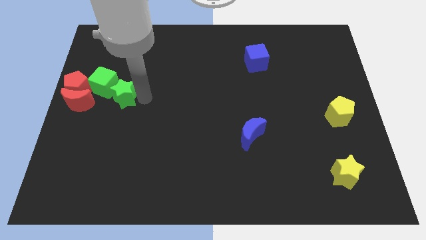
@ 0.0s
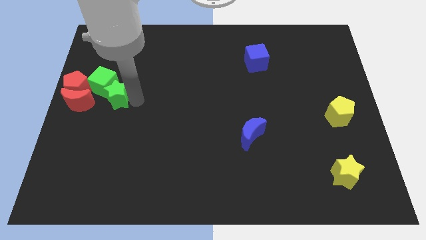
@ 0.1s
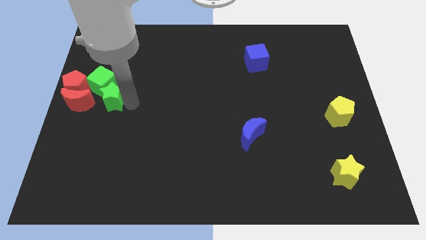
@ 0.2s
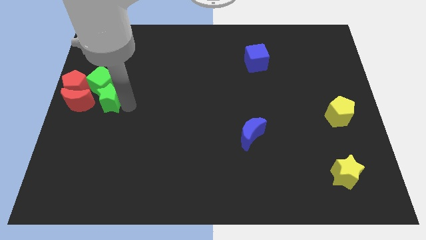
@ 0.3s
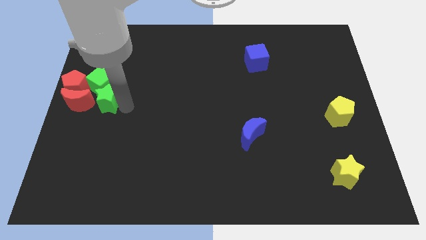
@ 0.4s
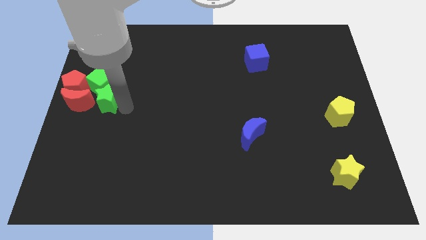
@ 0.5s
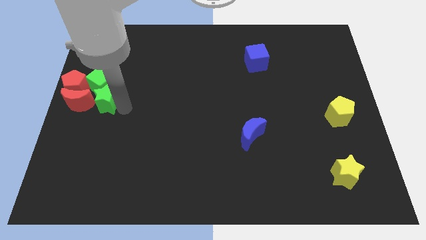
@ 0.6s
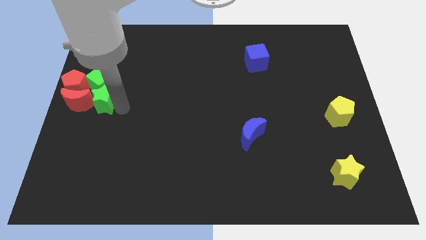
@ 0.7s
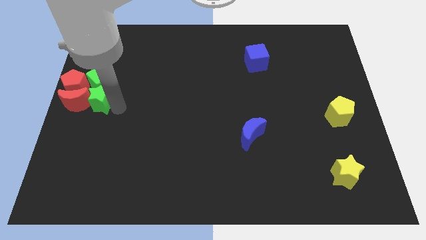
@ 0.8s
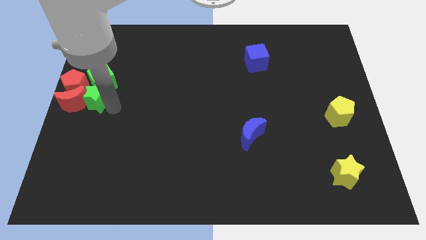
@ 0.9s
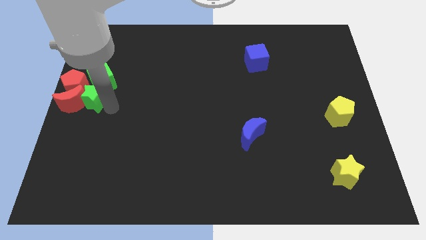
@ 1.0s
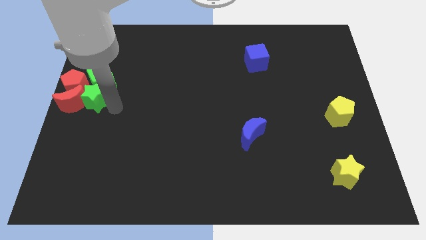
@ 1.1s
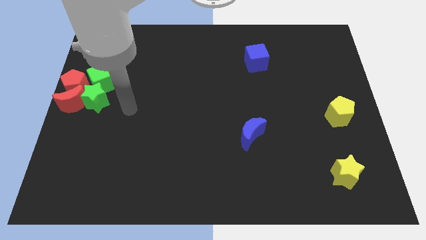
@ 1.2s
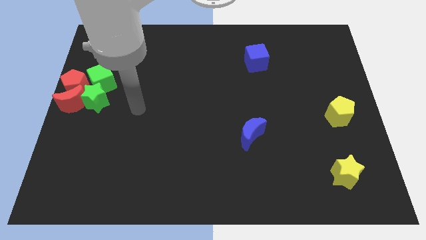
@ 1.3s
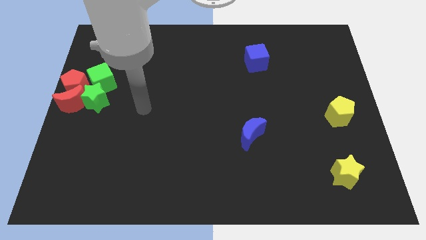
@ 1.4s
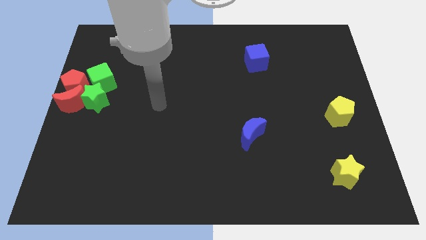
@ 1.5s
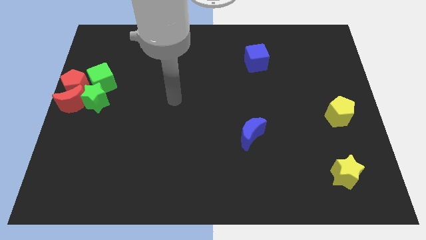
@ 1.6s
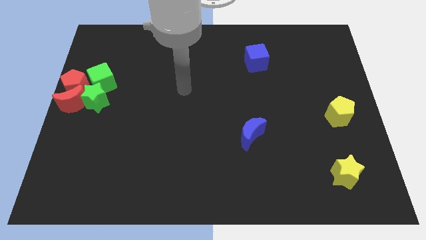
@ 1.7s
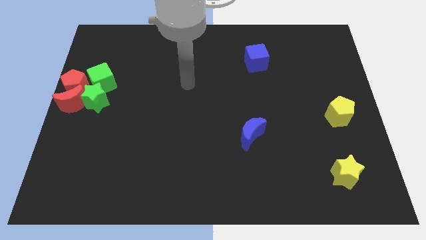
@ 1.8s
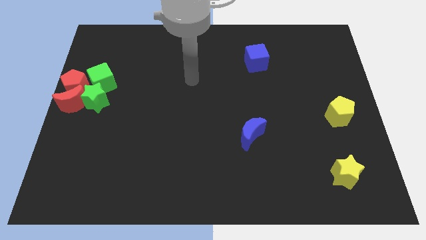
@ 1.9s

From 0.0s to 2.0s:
move the green star into the group of object

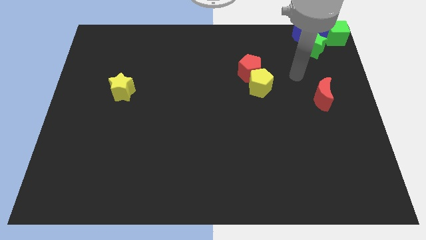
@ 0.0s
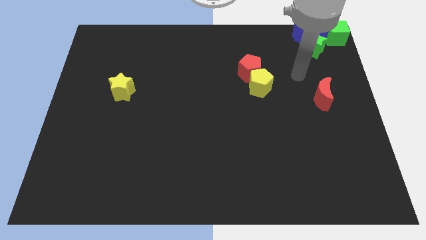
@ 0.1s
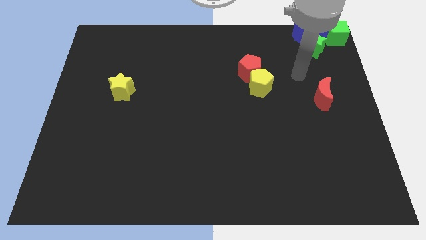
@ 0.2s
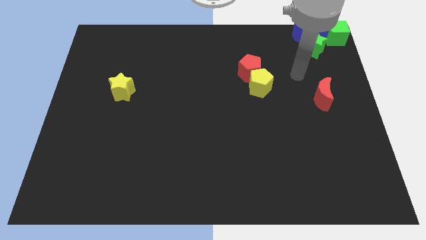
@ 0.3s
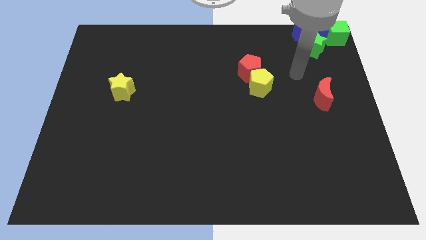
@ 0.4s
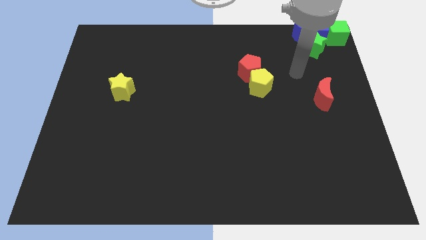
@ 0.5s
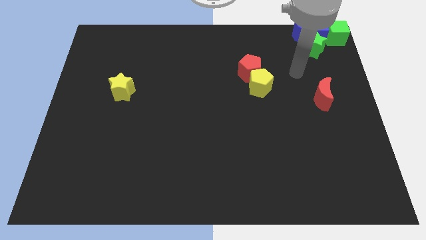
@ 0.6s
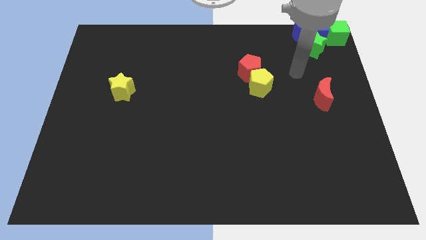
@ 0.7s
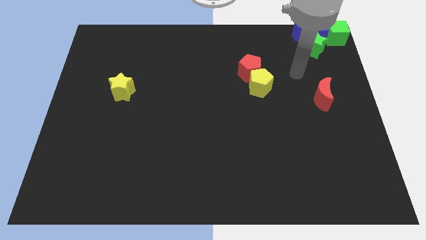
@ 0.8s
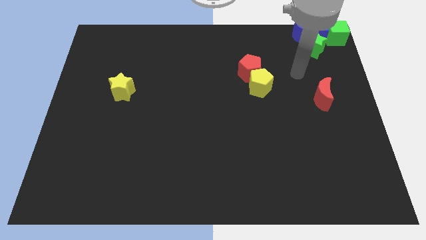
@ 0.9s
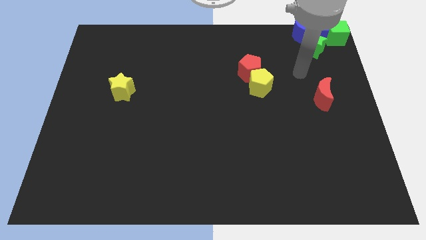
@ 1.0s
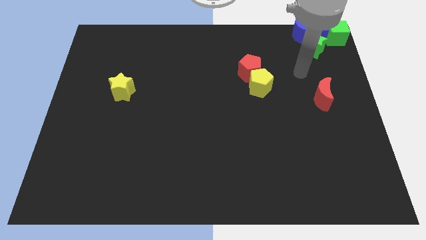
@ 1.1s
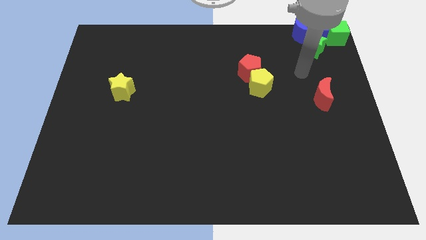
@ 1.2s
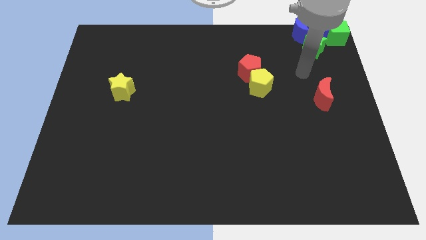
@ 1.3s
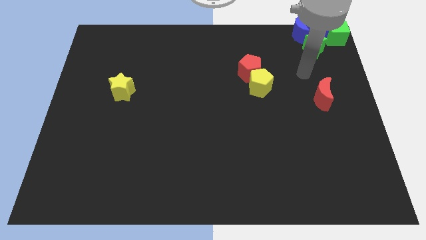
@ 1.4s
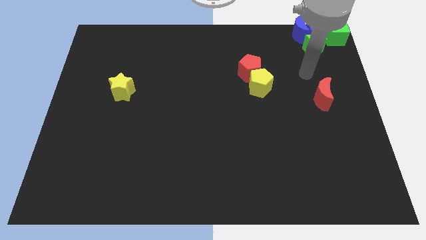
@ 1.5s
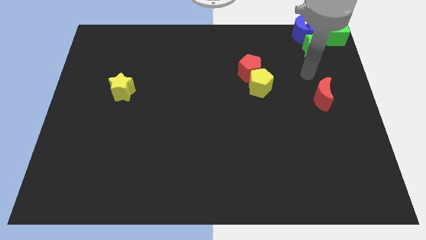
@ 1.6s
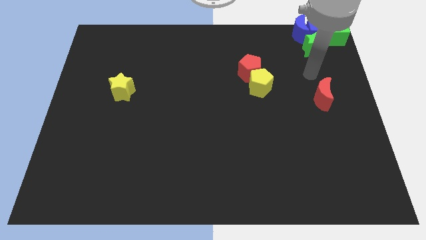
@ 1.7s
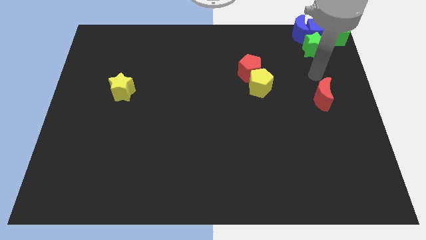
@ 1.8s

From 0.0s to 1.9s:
point your hand in between the green star and red moon

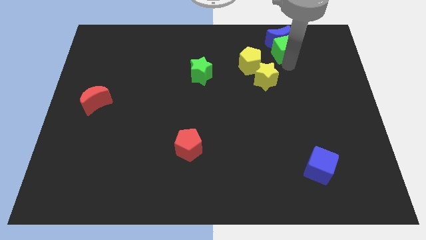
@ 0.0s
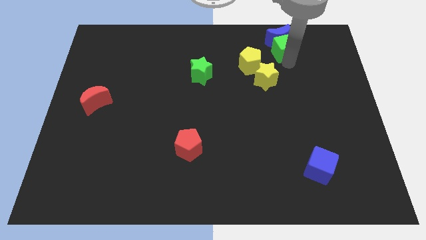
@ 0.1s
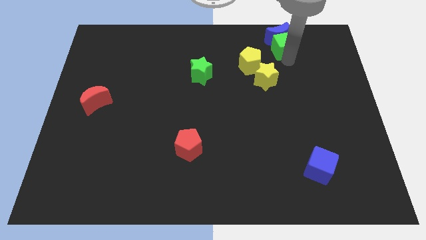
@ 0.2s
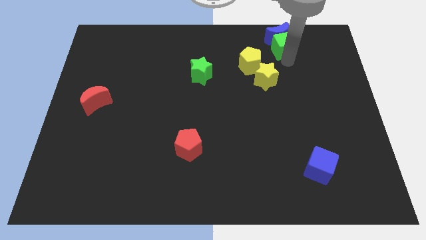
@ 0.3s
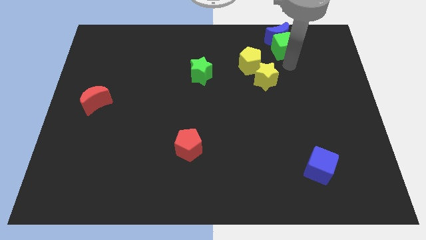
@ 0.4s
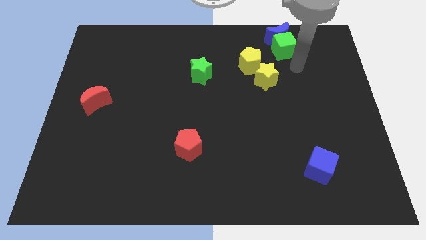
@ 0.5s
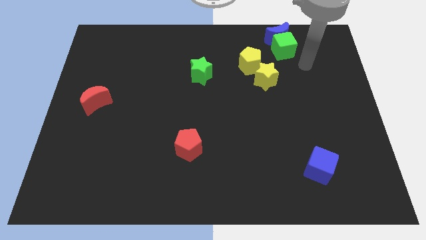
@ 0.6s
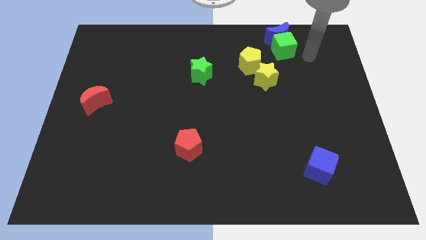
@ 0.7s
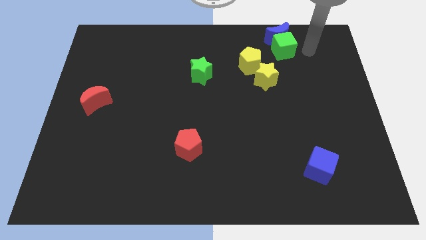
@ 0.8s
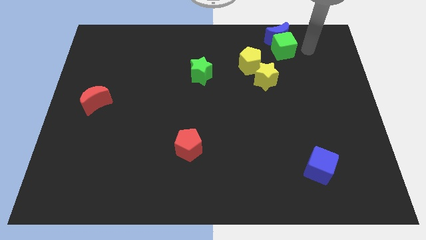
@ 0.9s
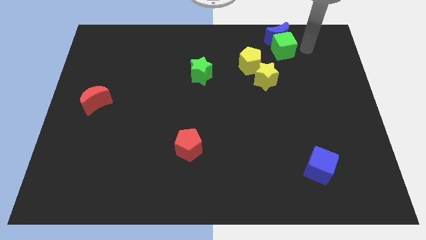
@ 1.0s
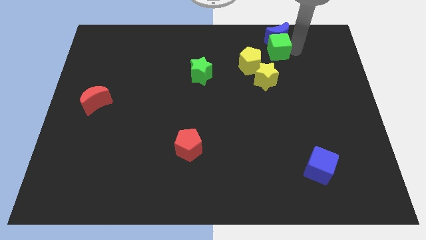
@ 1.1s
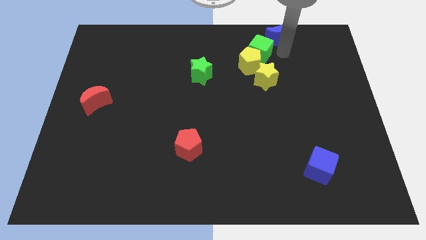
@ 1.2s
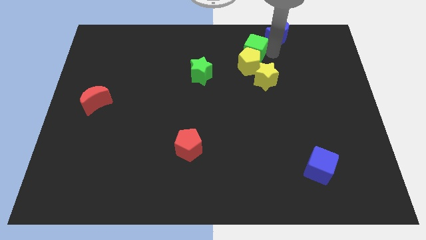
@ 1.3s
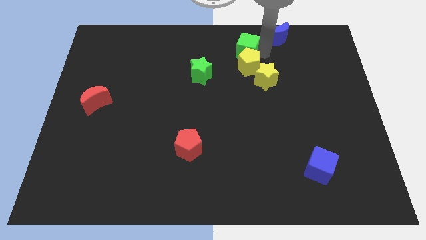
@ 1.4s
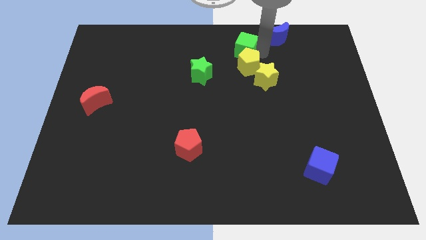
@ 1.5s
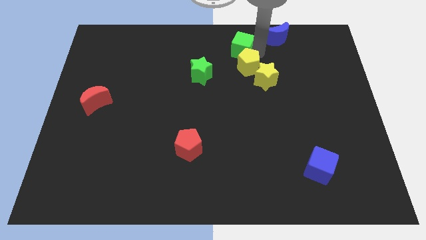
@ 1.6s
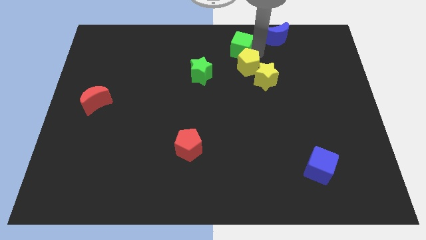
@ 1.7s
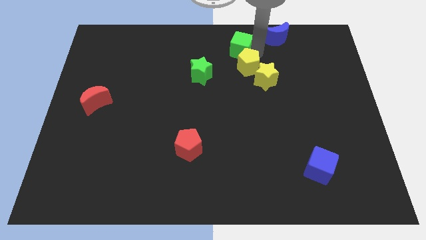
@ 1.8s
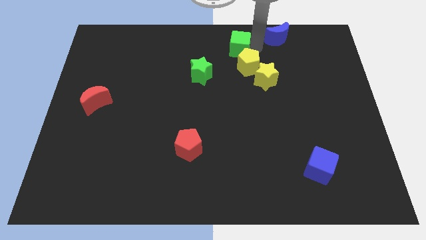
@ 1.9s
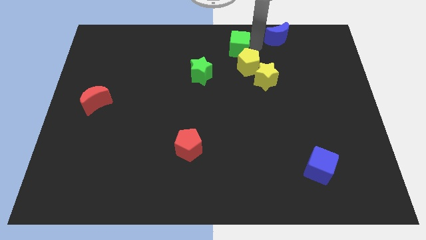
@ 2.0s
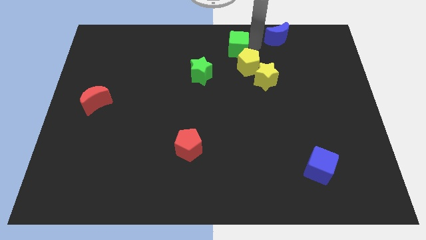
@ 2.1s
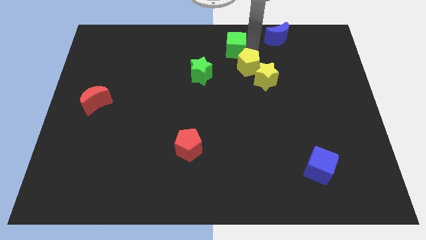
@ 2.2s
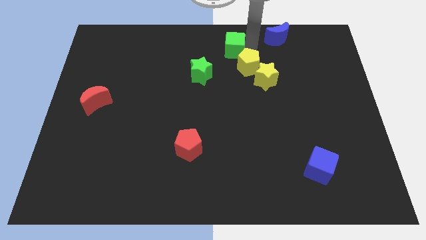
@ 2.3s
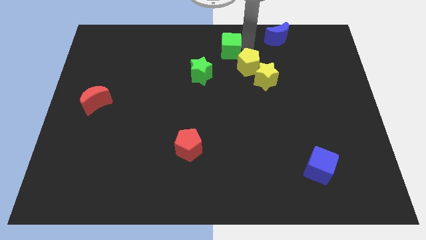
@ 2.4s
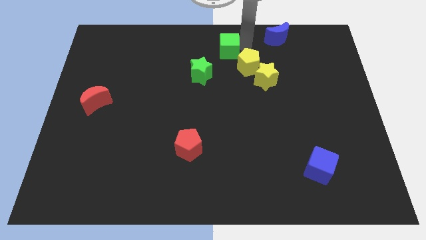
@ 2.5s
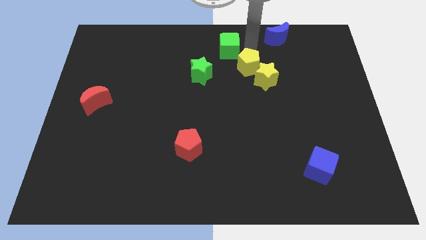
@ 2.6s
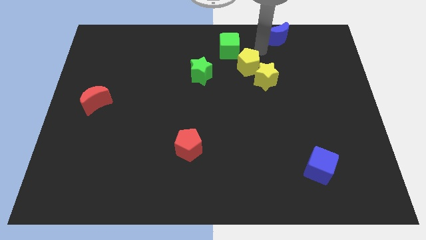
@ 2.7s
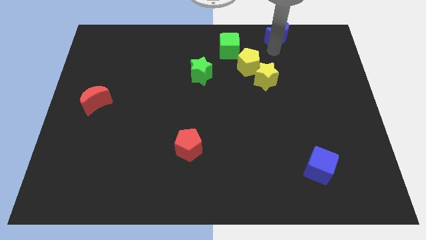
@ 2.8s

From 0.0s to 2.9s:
move the green cube diagonally to the left of the yellow pentagon

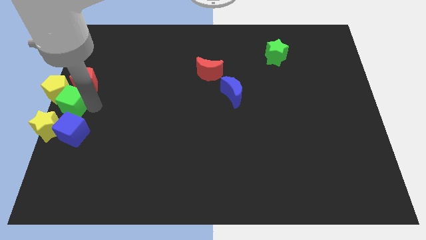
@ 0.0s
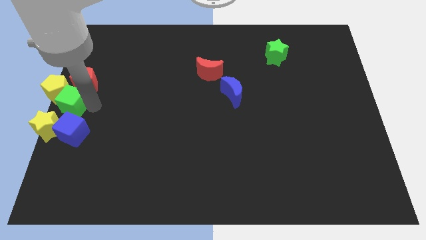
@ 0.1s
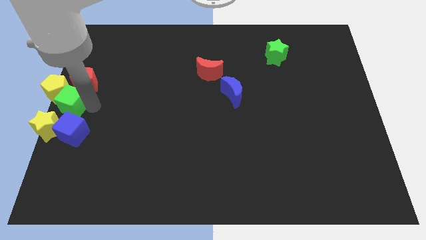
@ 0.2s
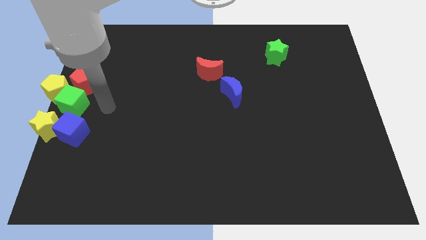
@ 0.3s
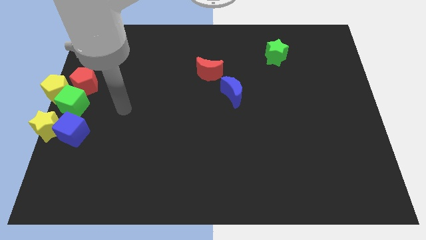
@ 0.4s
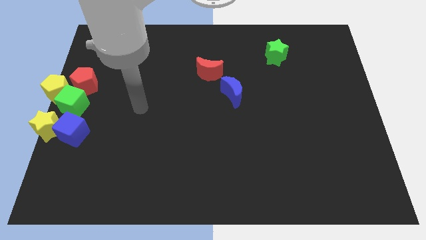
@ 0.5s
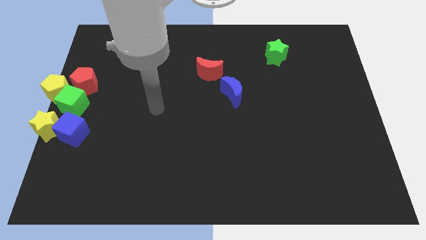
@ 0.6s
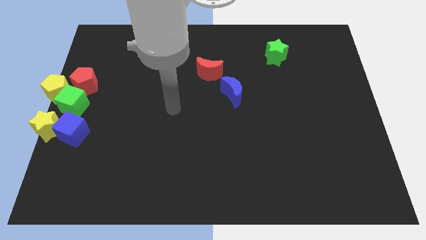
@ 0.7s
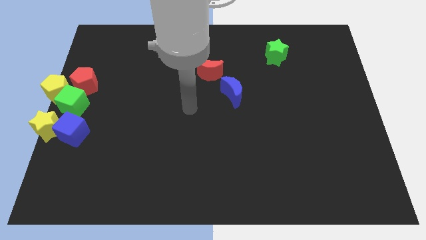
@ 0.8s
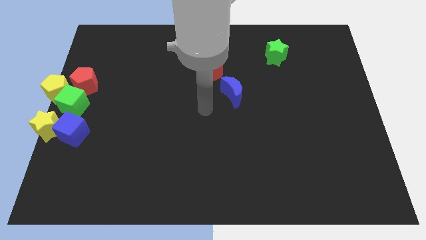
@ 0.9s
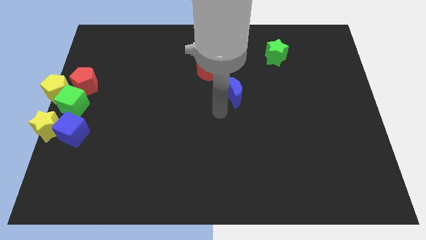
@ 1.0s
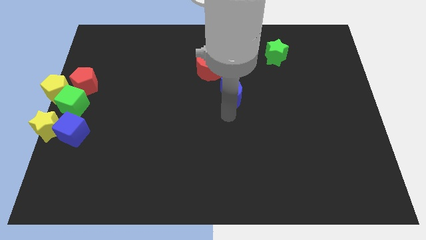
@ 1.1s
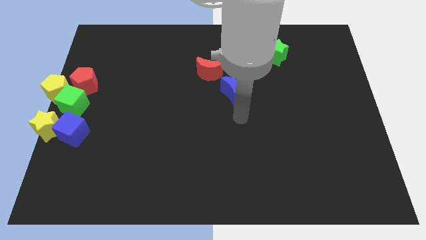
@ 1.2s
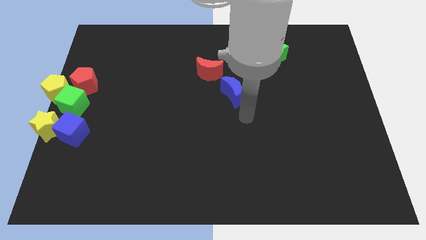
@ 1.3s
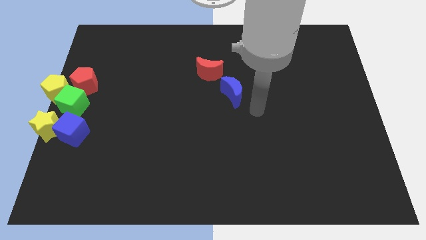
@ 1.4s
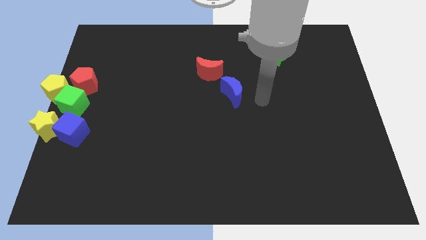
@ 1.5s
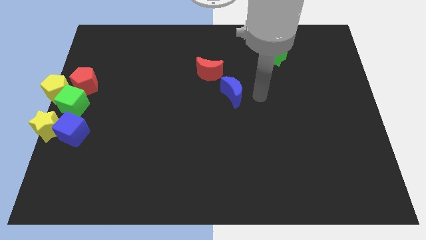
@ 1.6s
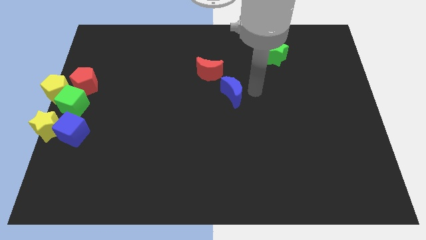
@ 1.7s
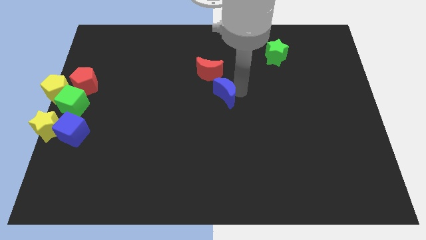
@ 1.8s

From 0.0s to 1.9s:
place your arm at the right side of the blue moon

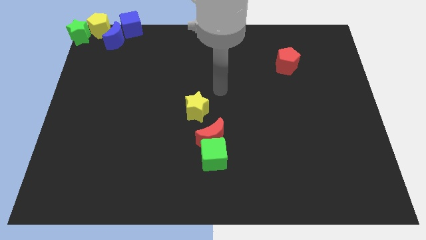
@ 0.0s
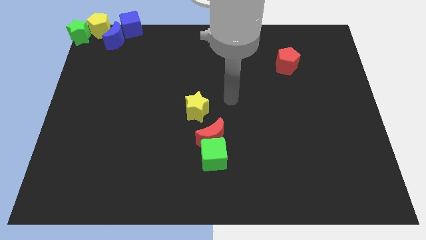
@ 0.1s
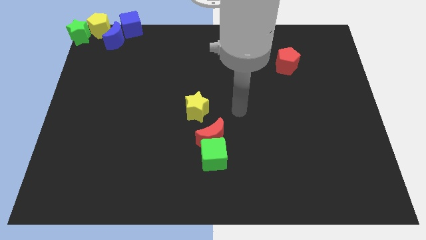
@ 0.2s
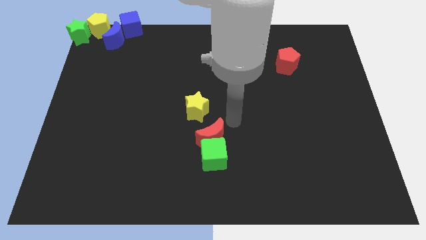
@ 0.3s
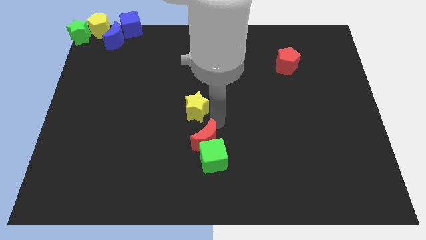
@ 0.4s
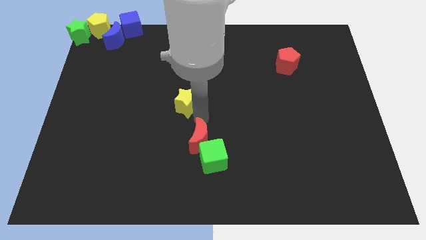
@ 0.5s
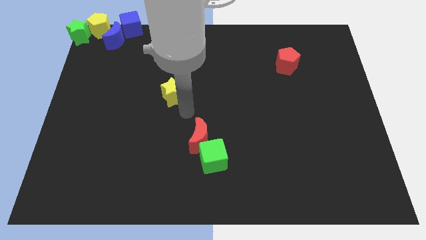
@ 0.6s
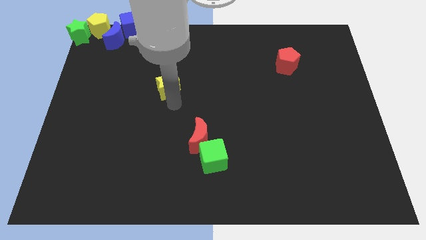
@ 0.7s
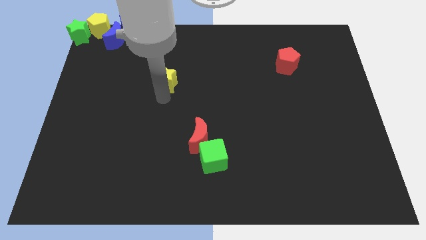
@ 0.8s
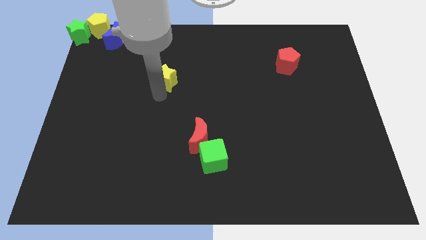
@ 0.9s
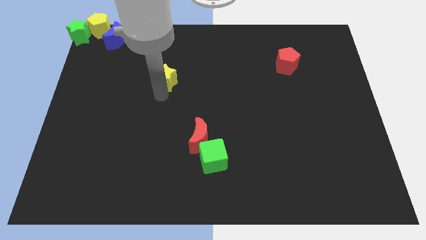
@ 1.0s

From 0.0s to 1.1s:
move the yellow star to the top left of the red crescent
